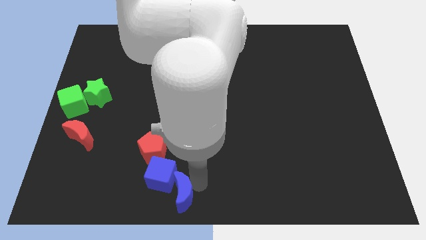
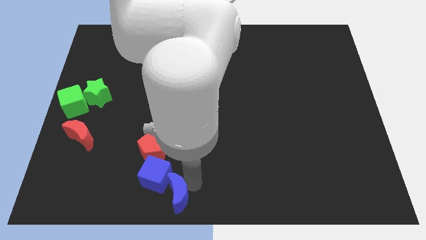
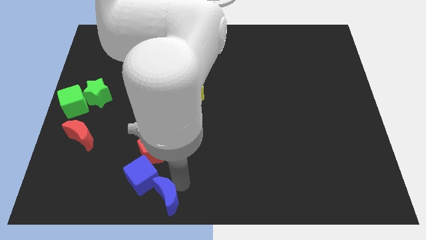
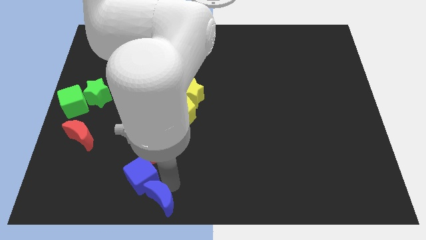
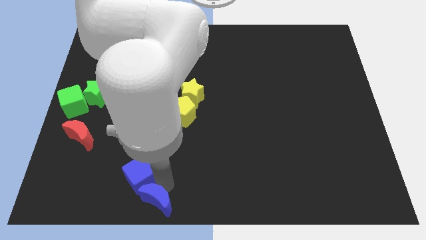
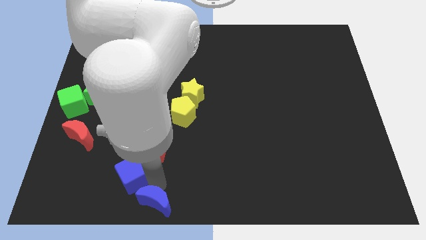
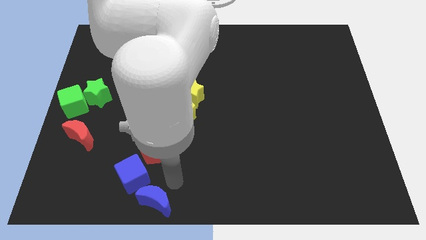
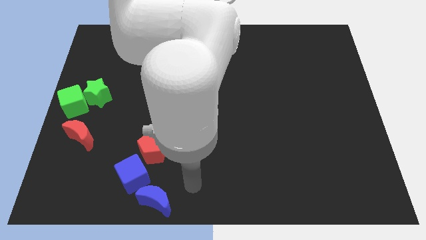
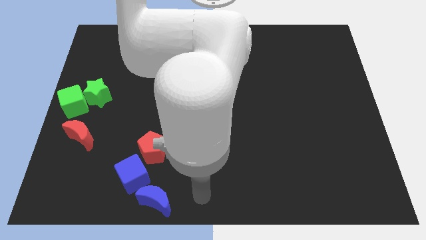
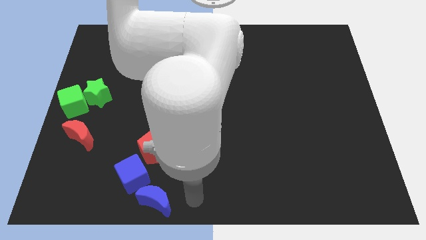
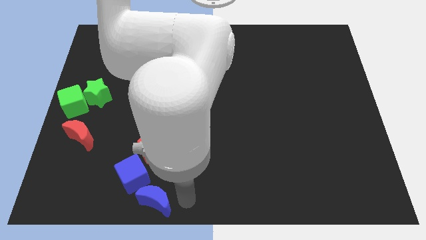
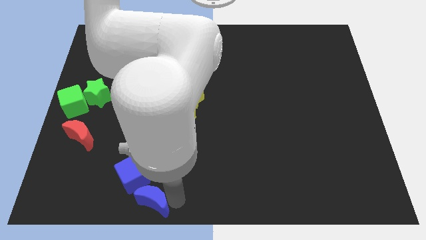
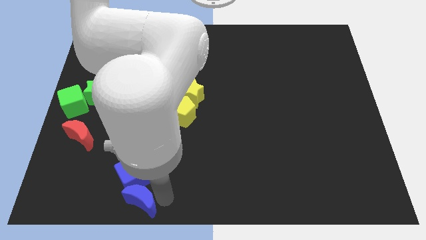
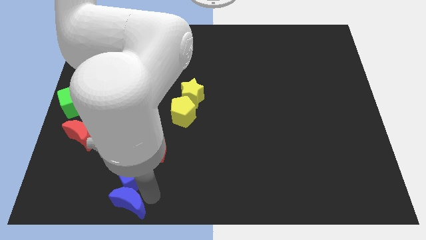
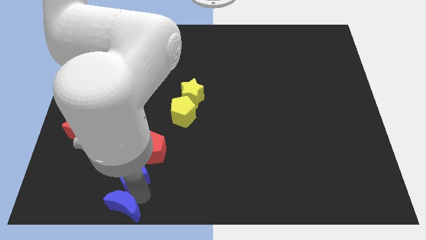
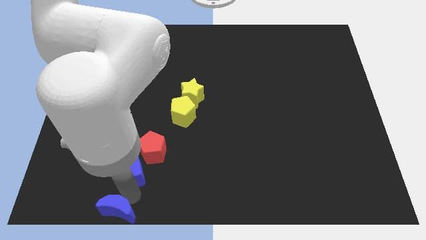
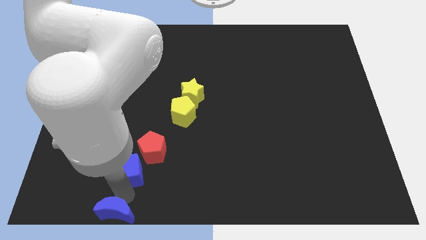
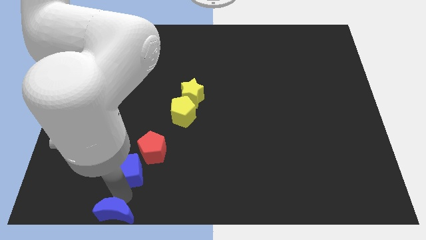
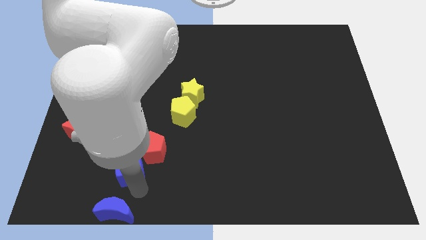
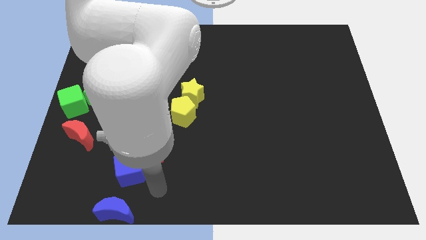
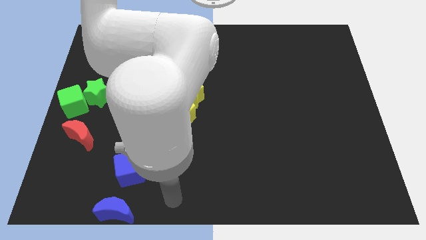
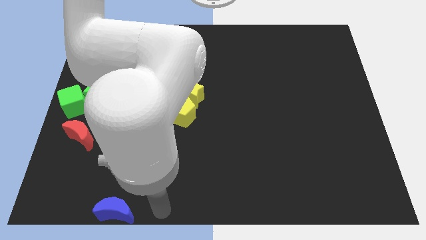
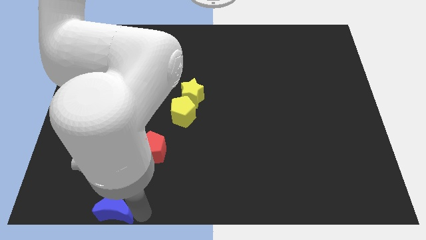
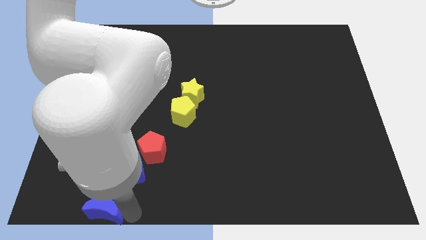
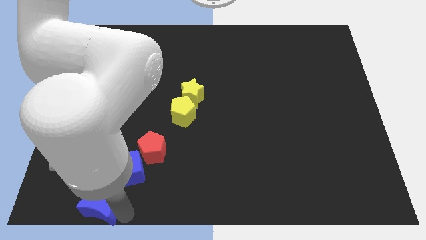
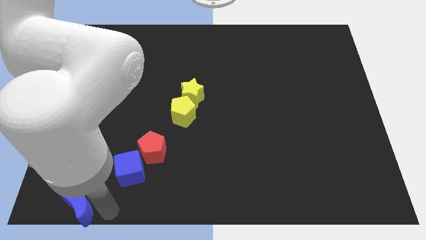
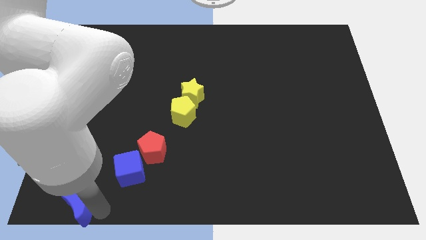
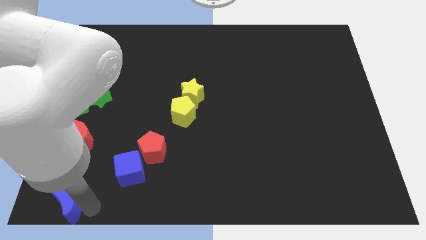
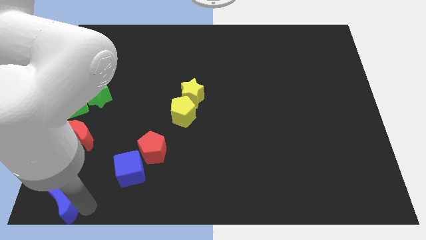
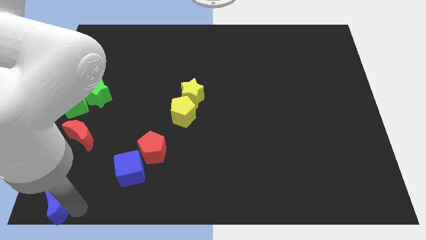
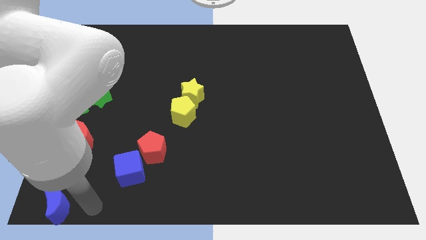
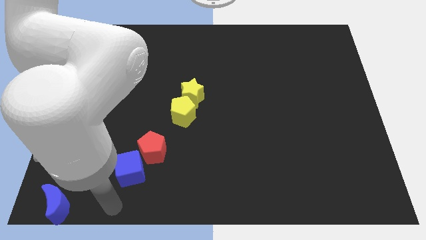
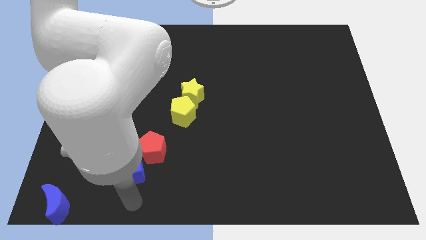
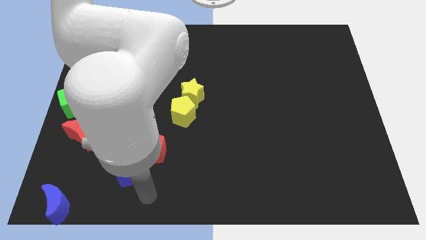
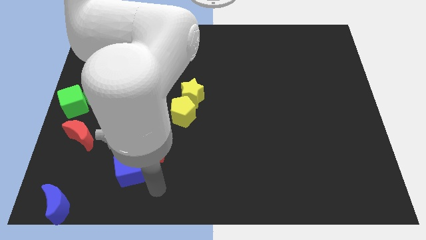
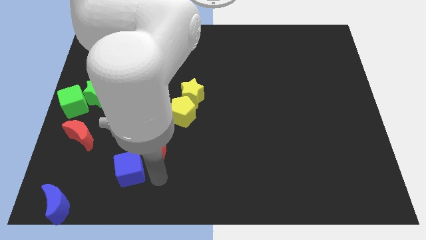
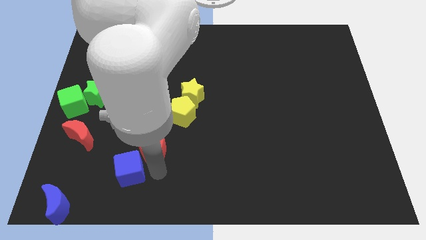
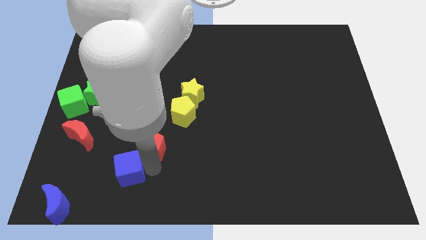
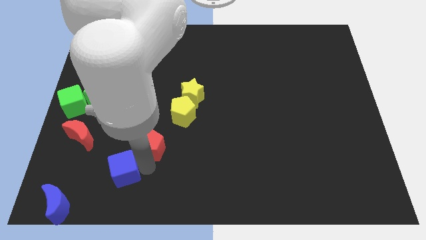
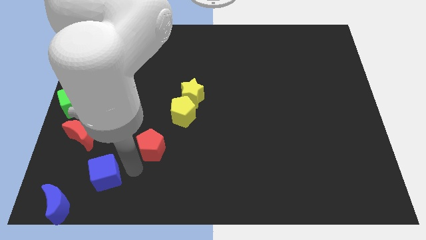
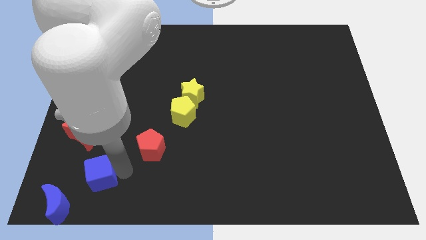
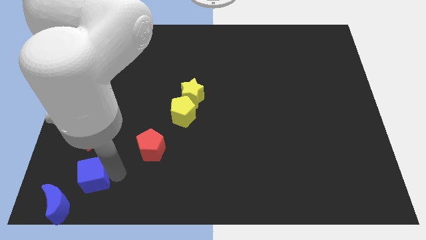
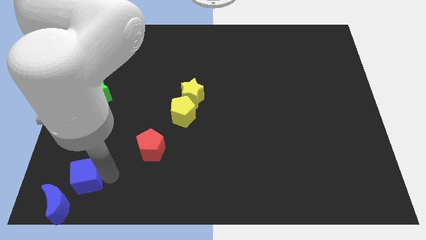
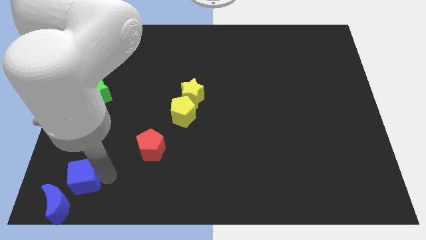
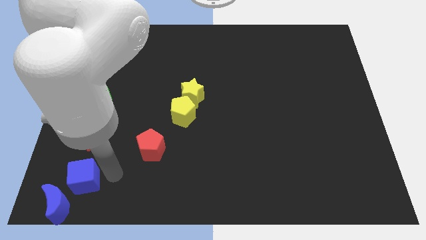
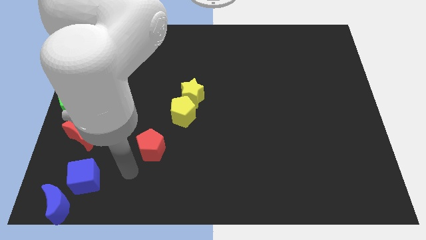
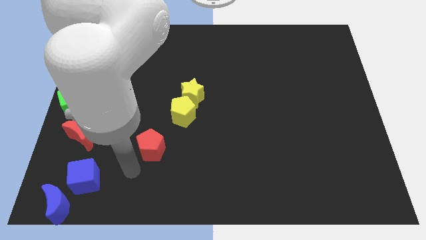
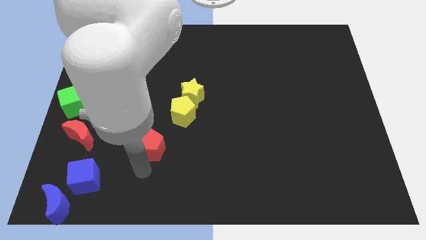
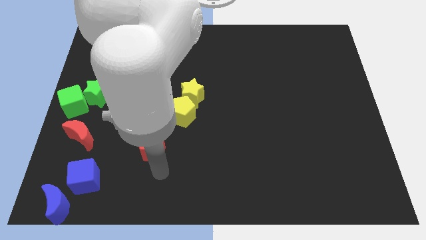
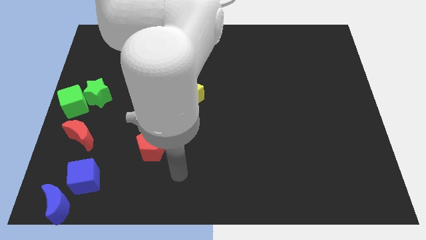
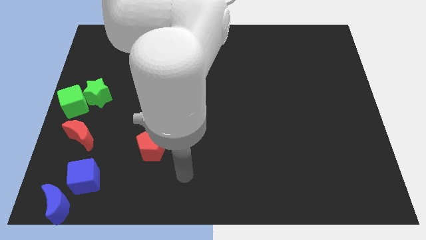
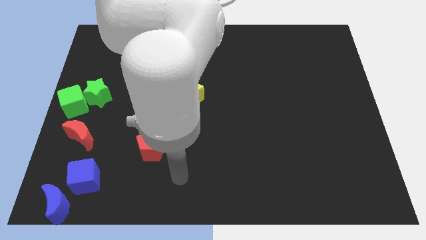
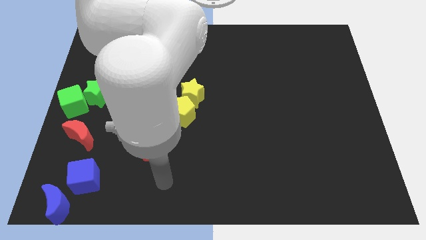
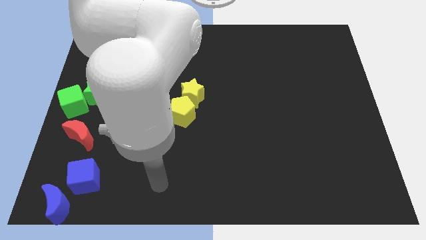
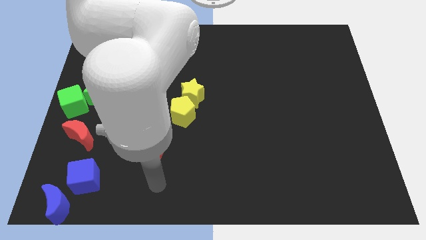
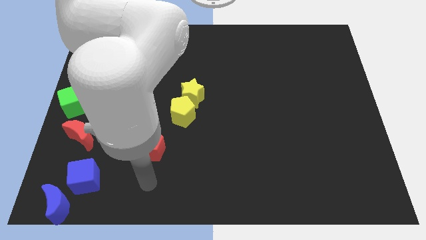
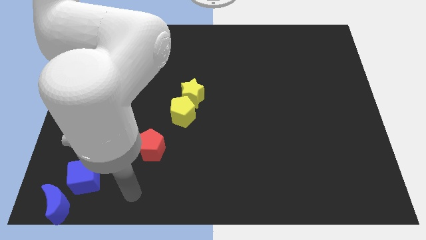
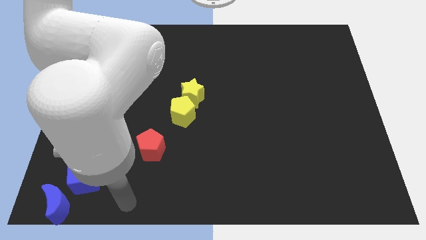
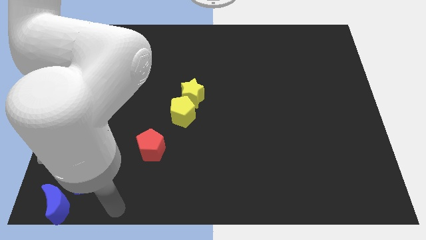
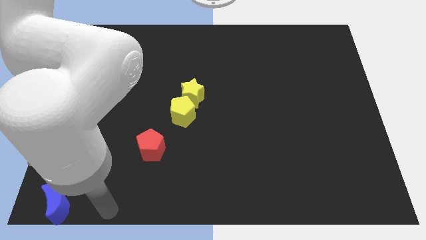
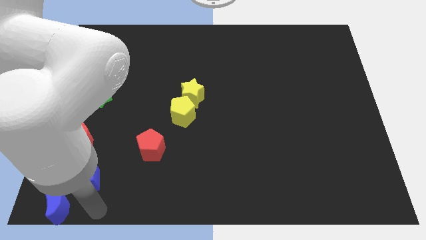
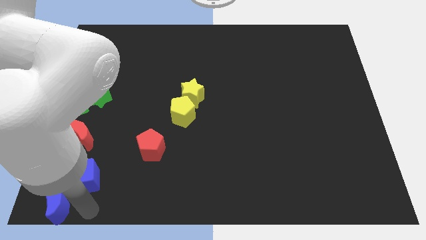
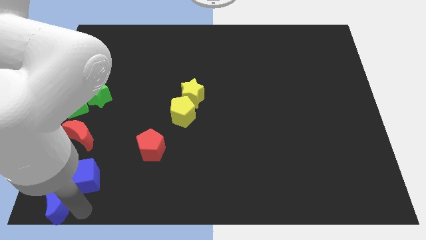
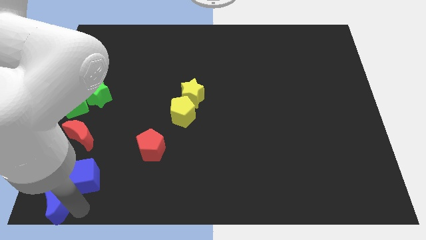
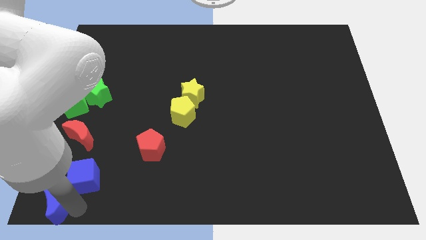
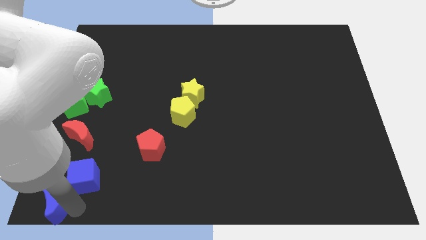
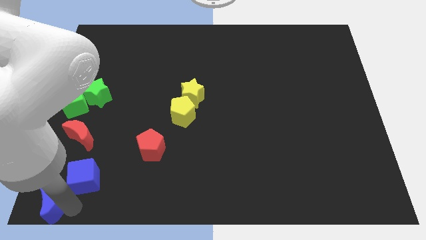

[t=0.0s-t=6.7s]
push the blue cube and blue moon to the bottom left

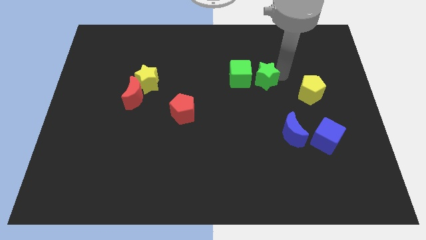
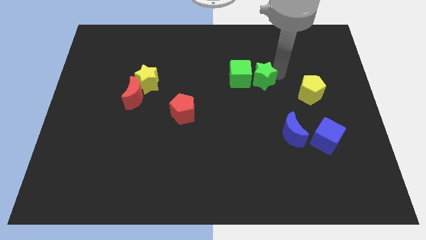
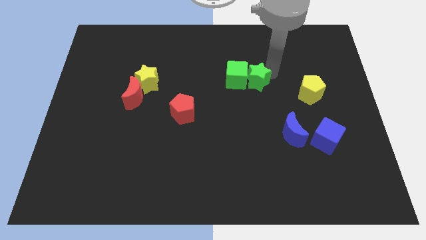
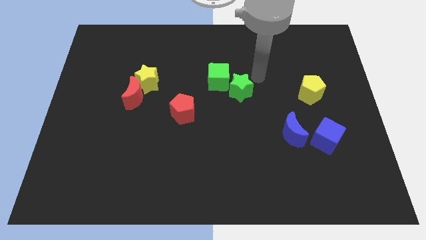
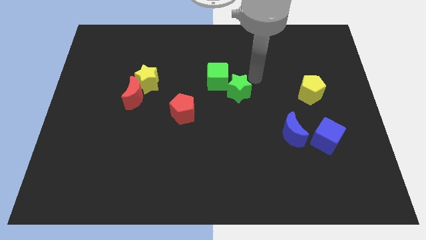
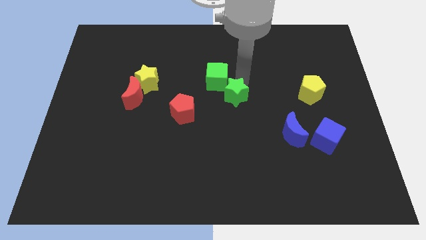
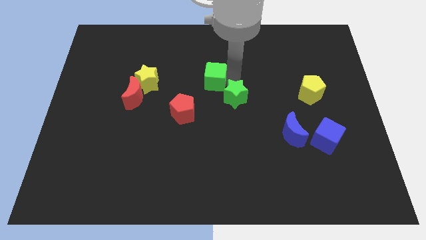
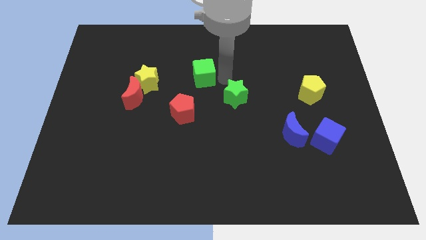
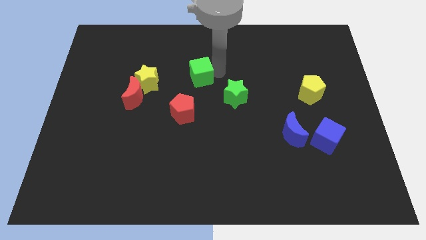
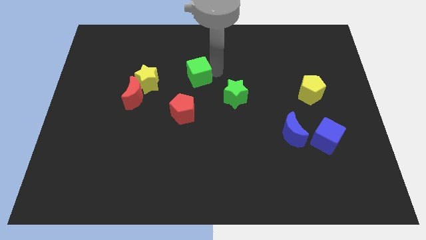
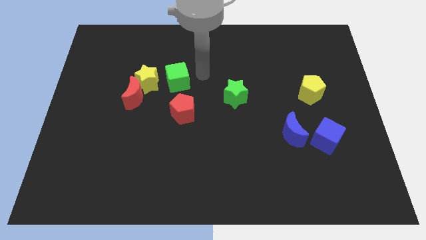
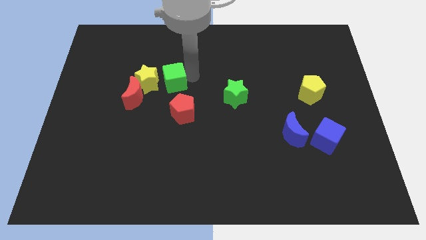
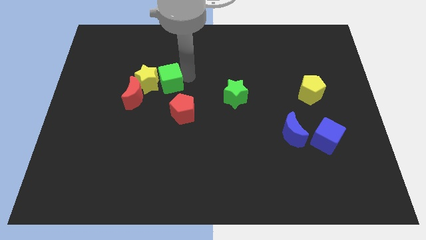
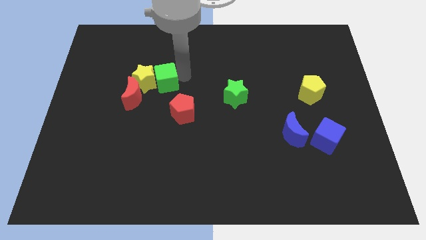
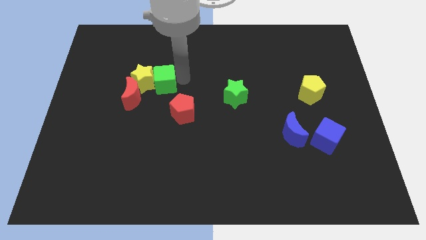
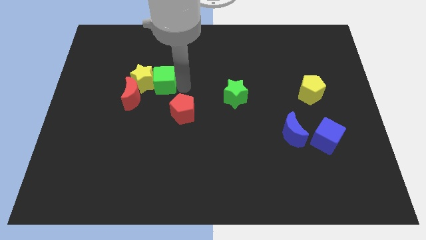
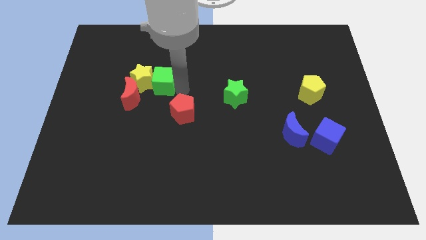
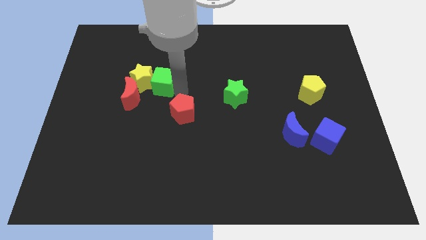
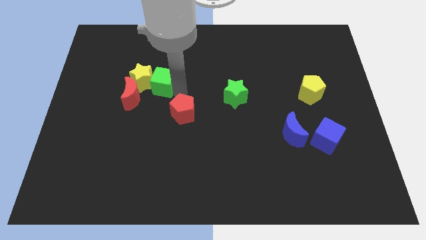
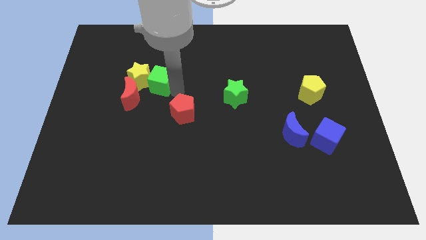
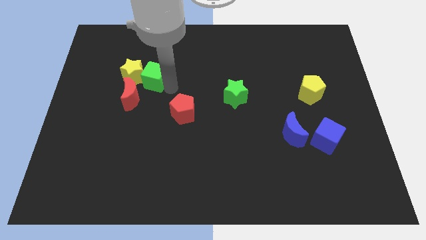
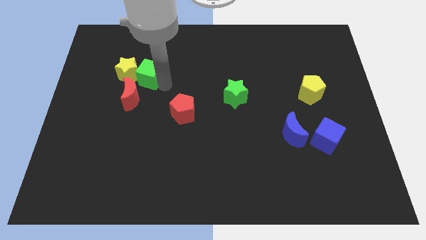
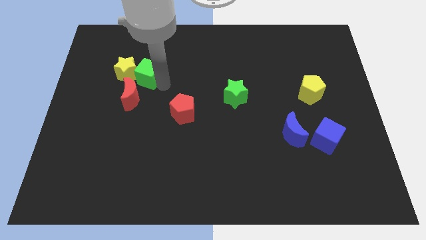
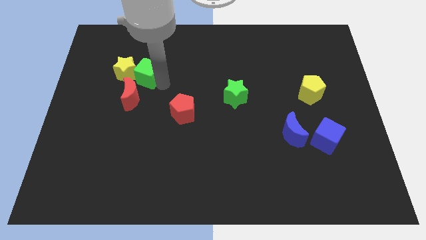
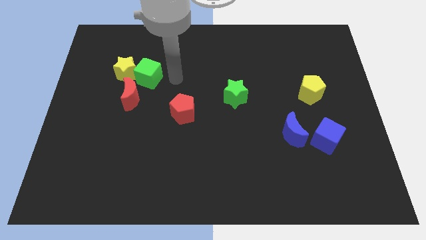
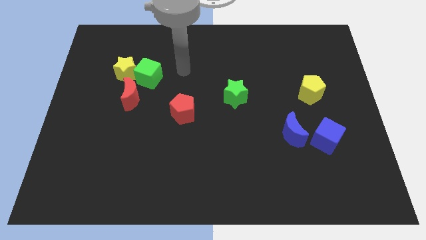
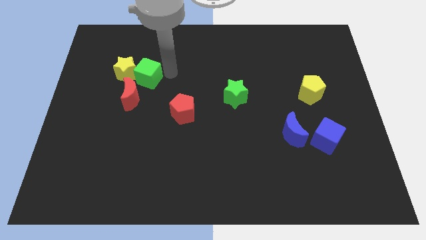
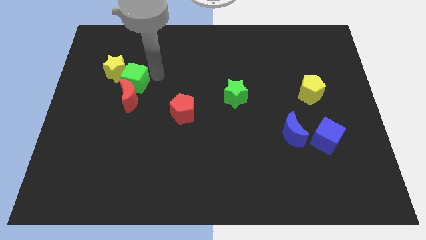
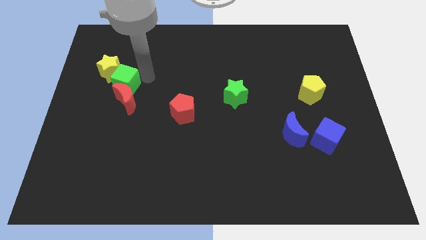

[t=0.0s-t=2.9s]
push the green star into the green cube
